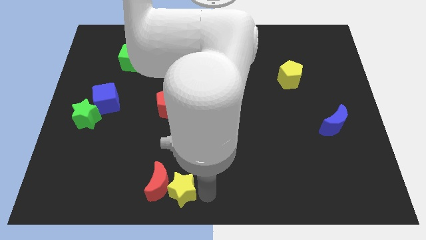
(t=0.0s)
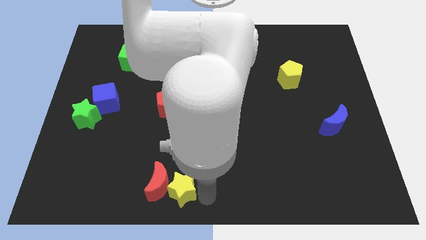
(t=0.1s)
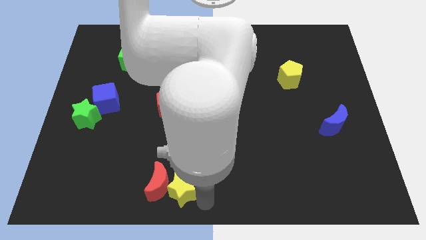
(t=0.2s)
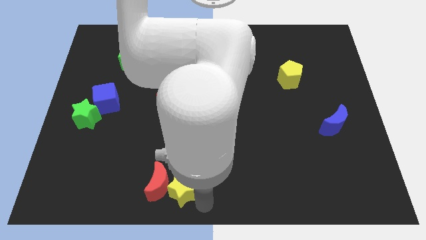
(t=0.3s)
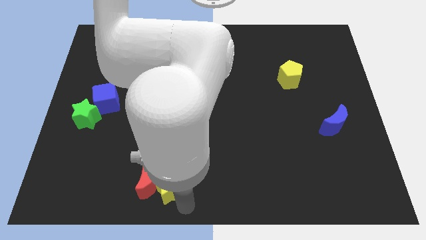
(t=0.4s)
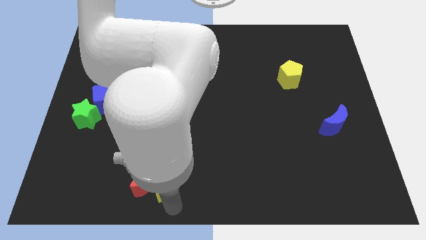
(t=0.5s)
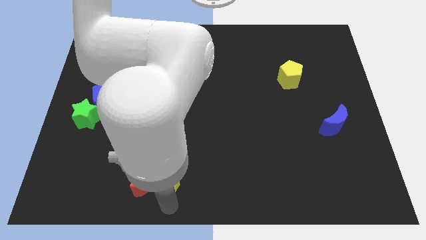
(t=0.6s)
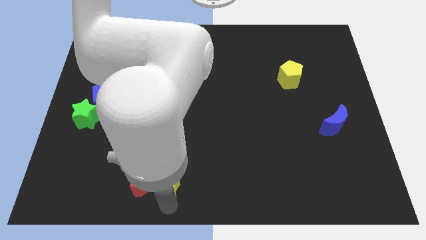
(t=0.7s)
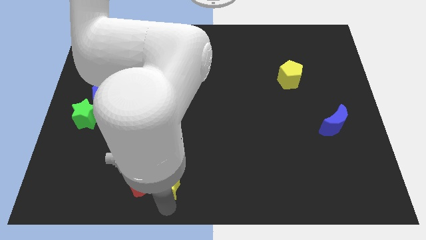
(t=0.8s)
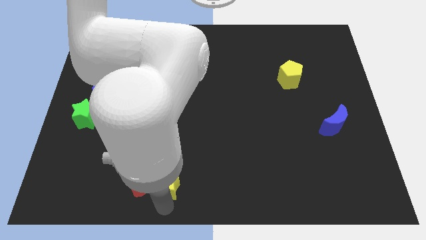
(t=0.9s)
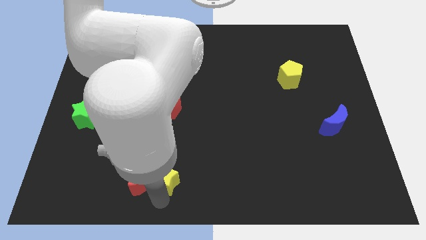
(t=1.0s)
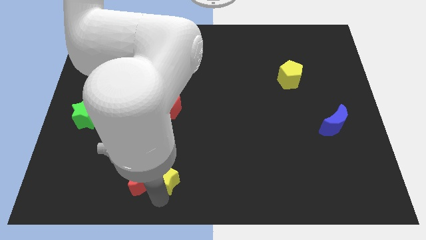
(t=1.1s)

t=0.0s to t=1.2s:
push the yellow star into the red moon

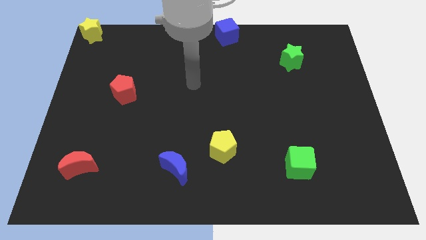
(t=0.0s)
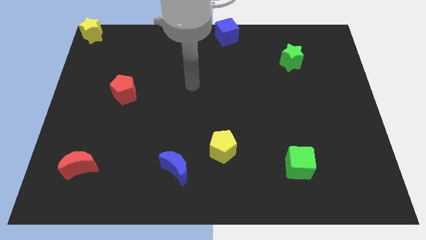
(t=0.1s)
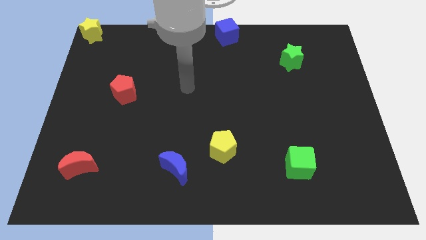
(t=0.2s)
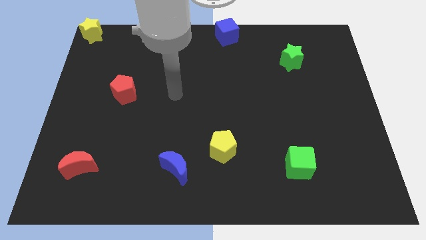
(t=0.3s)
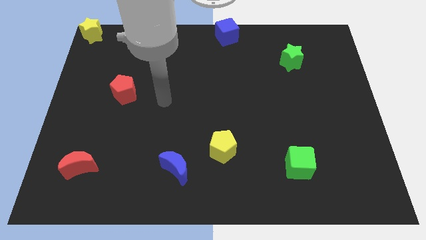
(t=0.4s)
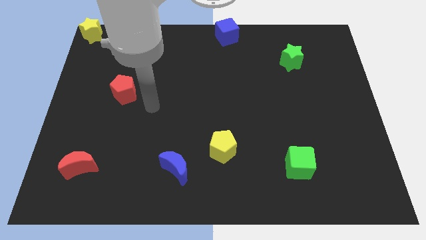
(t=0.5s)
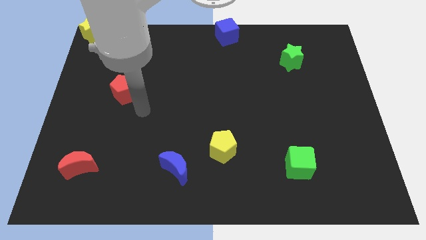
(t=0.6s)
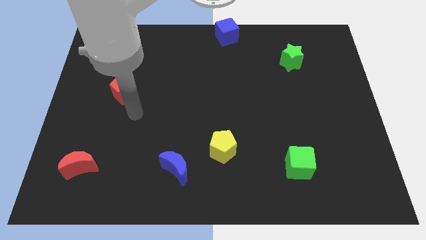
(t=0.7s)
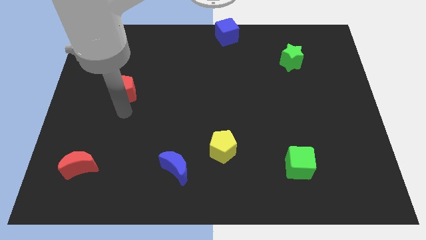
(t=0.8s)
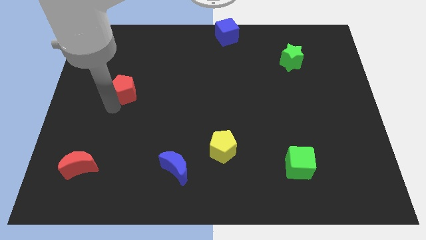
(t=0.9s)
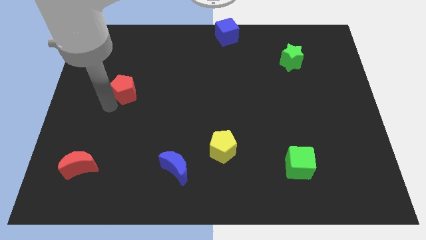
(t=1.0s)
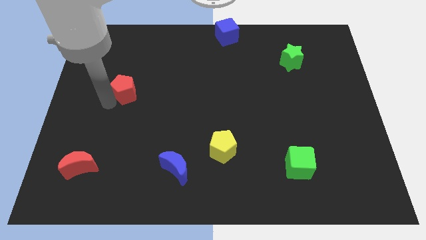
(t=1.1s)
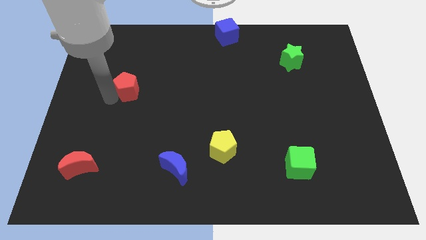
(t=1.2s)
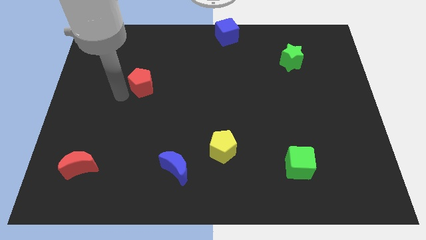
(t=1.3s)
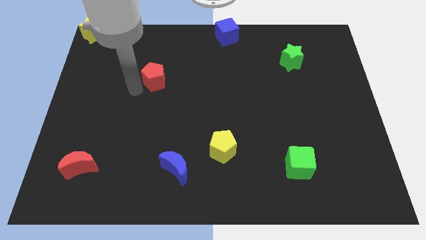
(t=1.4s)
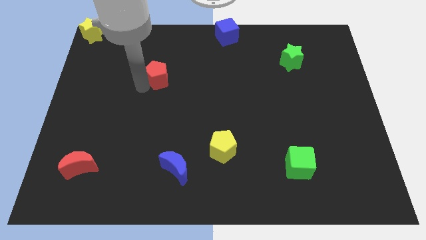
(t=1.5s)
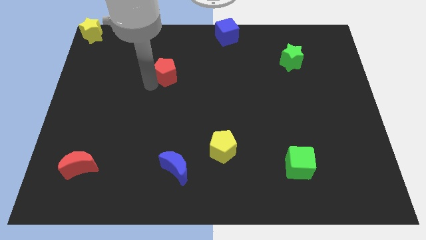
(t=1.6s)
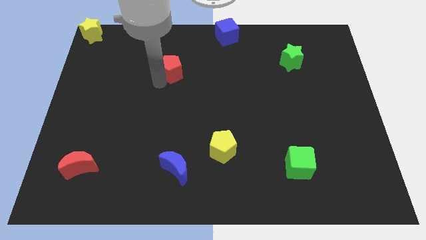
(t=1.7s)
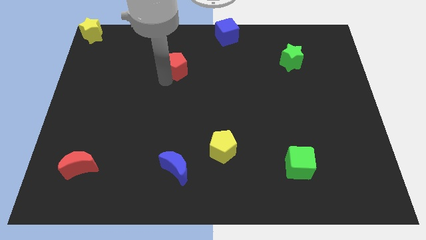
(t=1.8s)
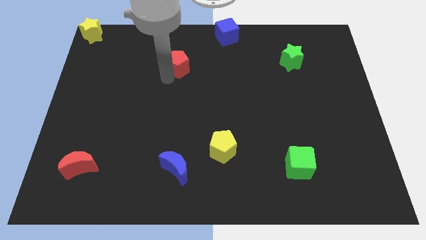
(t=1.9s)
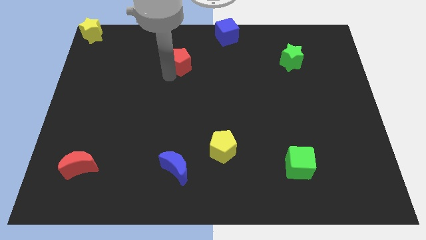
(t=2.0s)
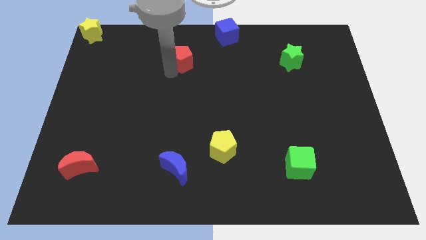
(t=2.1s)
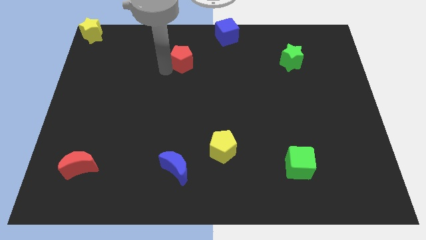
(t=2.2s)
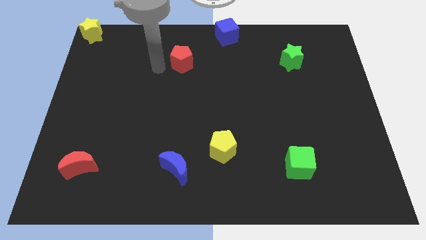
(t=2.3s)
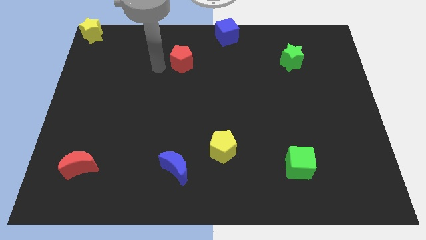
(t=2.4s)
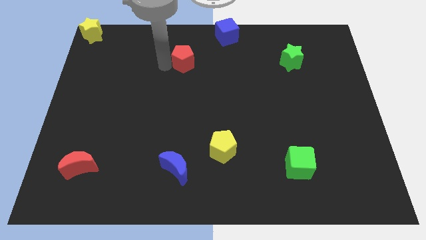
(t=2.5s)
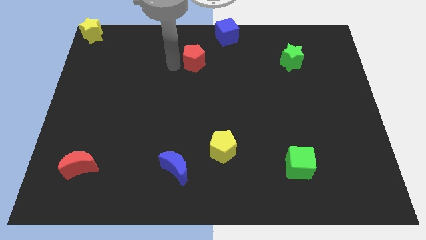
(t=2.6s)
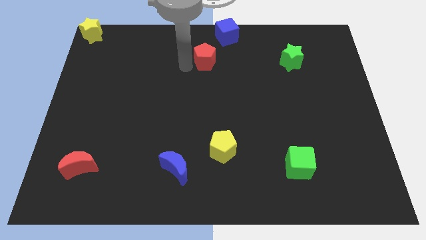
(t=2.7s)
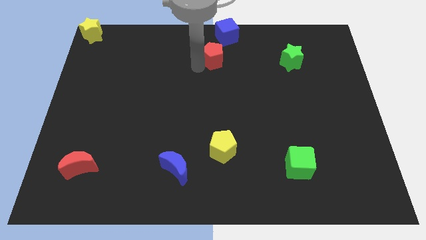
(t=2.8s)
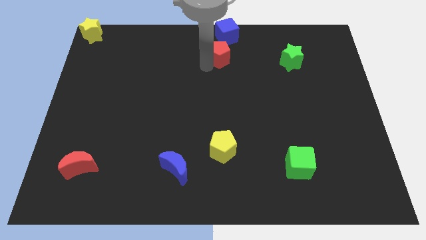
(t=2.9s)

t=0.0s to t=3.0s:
move the red pentagon diagonal below blue cube

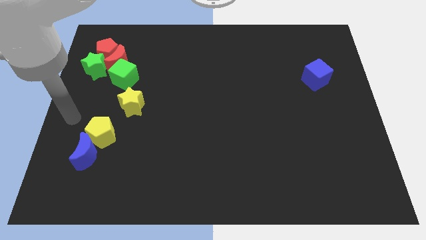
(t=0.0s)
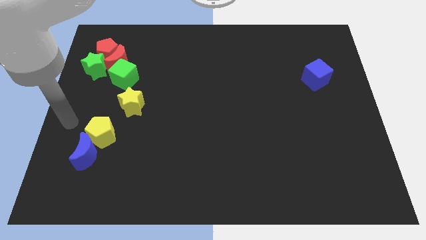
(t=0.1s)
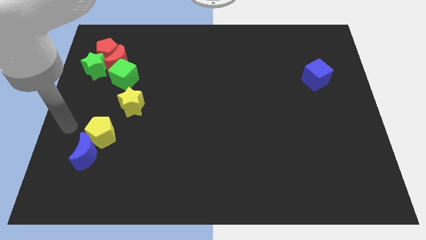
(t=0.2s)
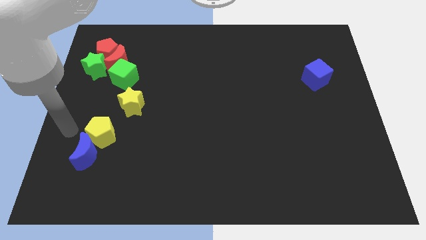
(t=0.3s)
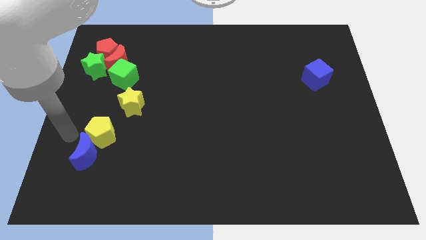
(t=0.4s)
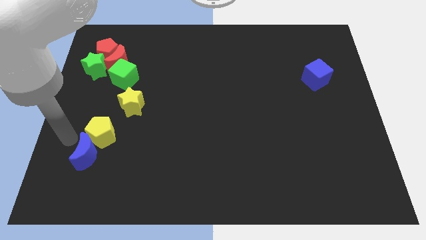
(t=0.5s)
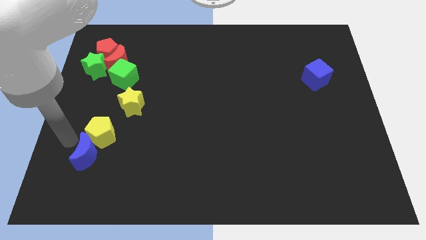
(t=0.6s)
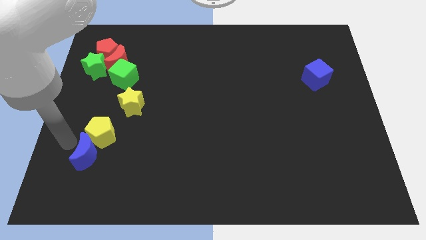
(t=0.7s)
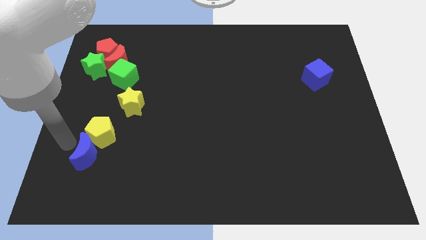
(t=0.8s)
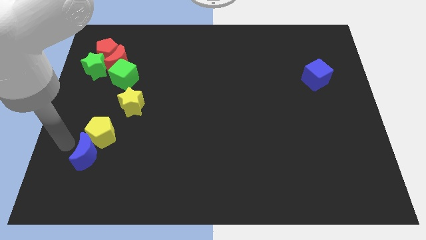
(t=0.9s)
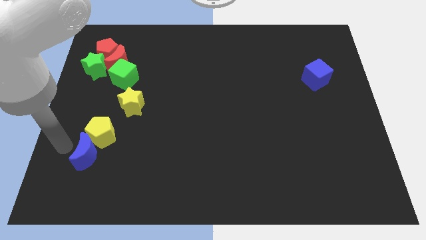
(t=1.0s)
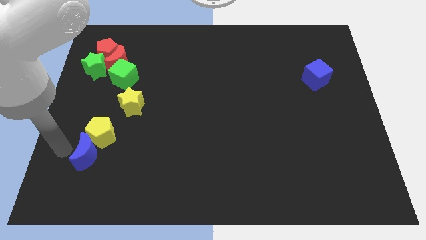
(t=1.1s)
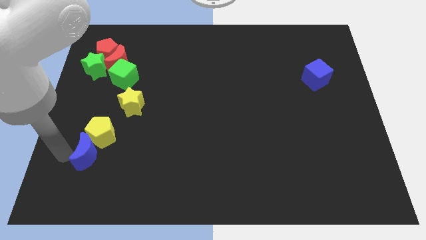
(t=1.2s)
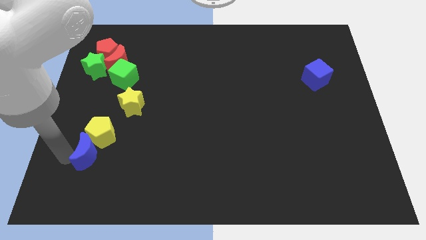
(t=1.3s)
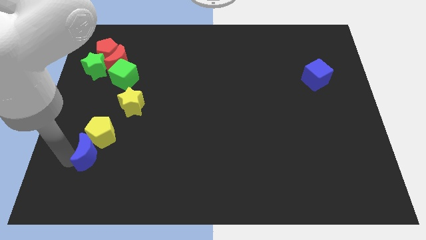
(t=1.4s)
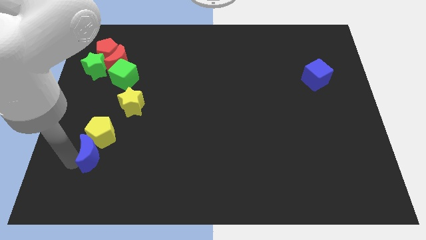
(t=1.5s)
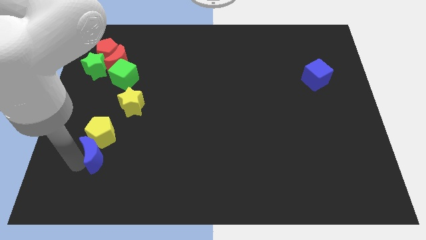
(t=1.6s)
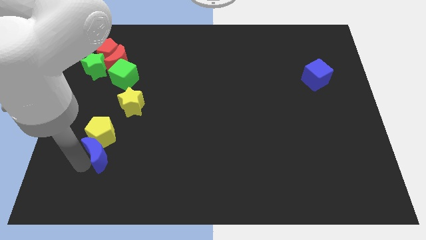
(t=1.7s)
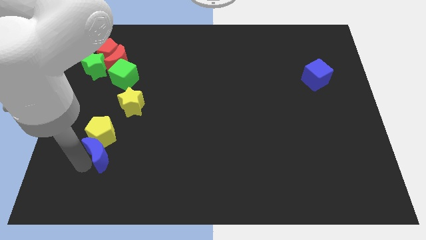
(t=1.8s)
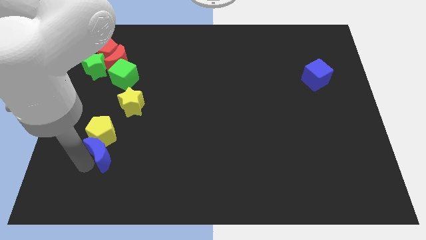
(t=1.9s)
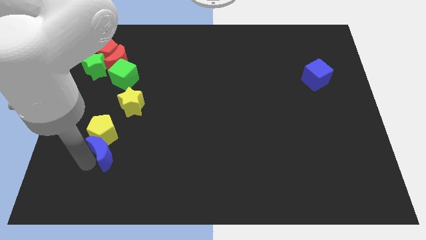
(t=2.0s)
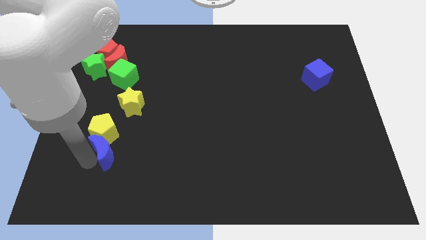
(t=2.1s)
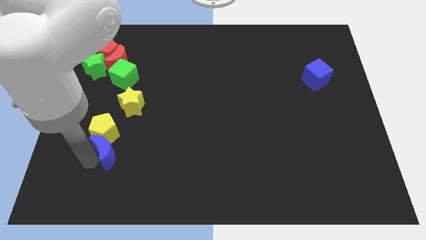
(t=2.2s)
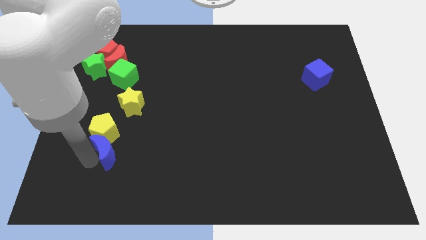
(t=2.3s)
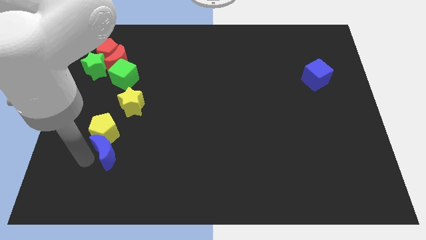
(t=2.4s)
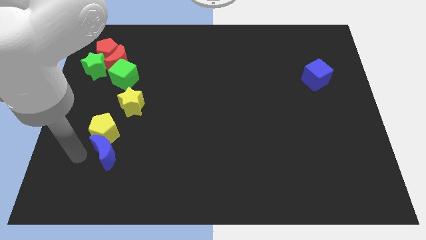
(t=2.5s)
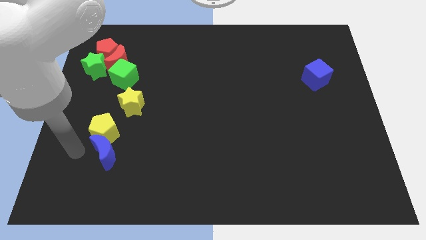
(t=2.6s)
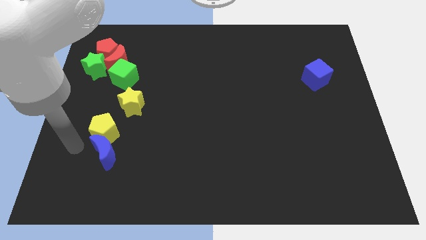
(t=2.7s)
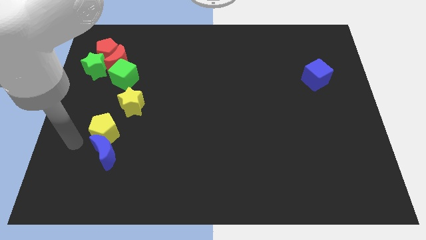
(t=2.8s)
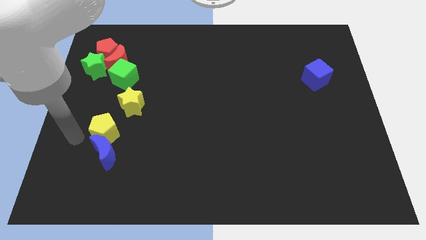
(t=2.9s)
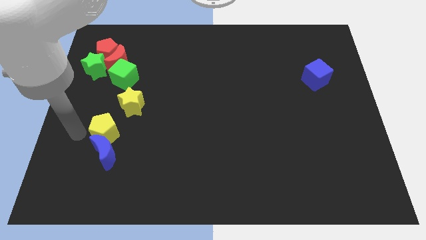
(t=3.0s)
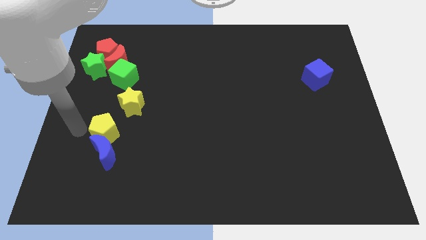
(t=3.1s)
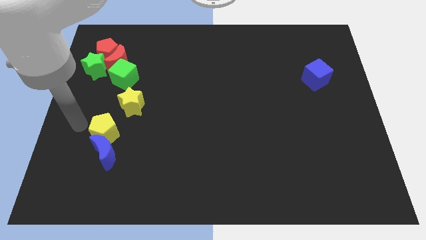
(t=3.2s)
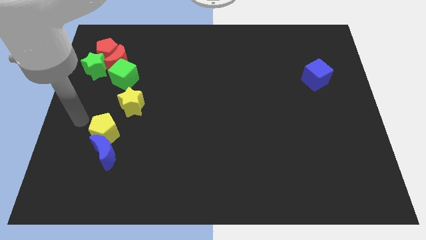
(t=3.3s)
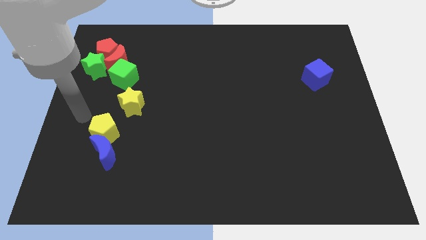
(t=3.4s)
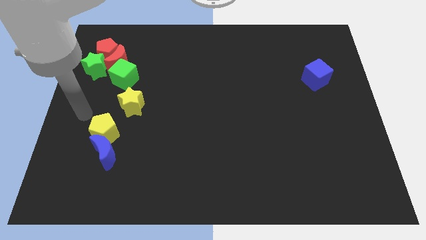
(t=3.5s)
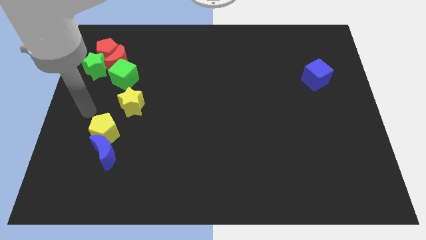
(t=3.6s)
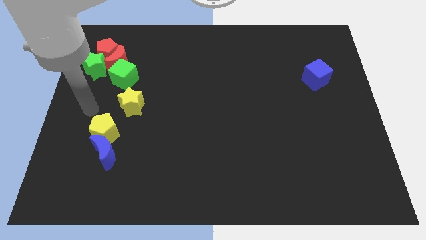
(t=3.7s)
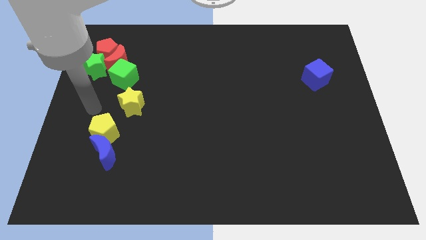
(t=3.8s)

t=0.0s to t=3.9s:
push the blue crescent into the yellow pentagon

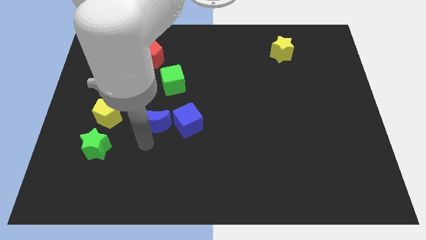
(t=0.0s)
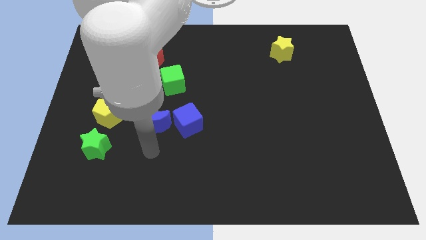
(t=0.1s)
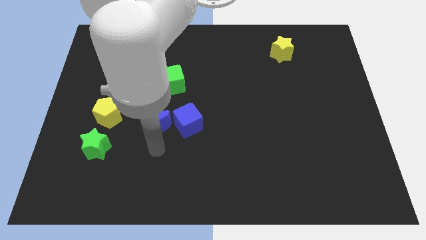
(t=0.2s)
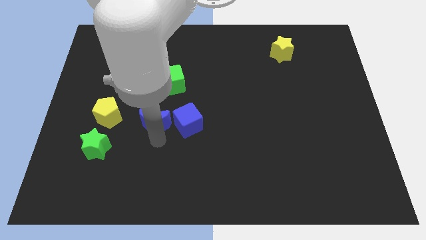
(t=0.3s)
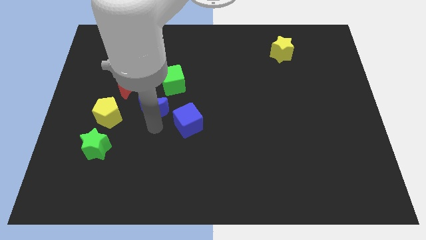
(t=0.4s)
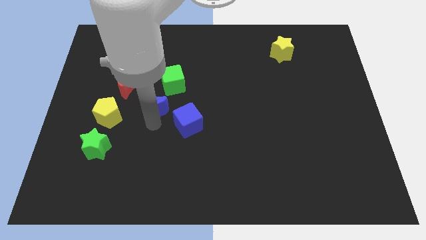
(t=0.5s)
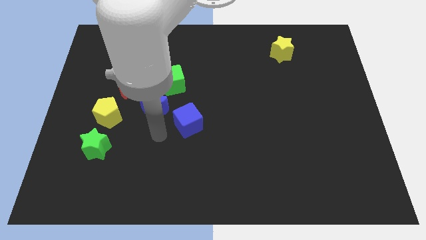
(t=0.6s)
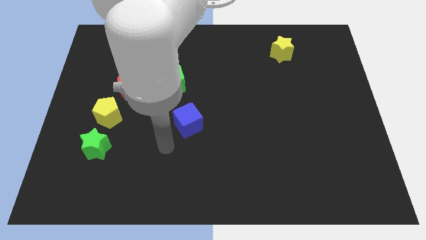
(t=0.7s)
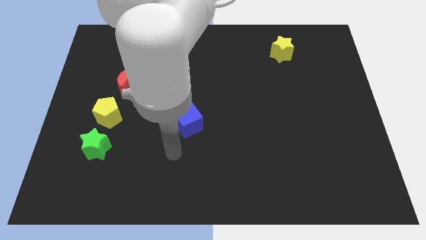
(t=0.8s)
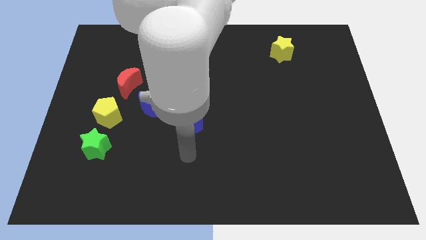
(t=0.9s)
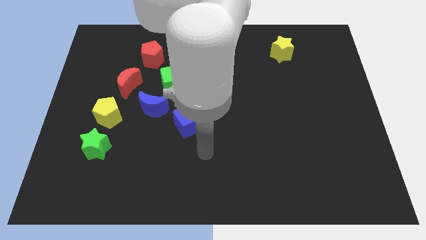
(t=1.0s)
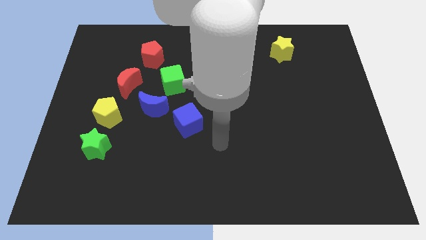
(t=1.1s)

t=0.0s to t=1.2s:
place the blue moon diagonally to the bottom left of the green cube
